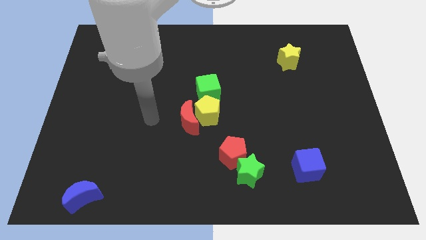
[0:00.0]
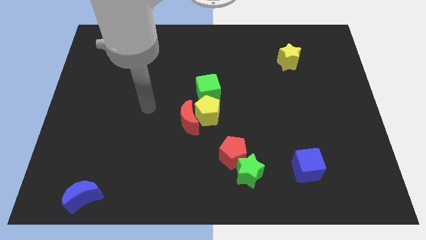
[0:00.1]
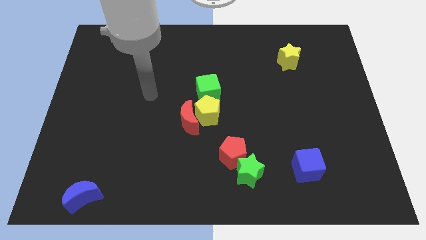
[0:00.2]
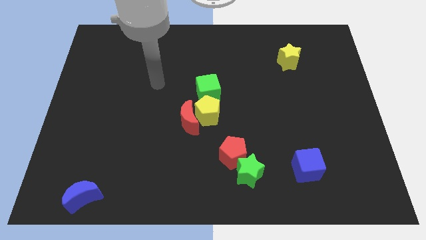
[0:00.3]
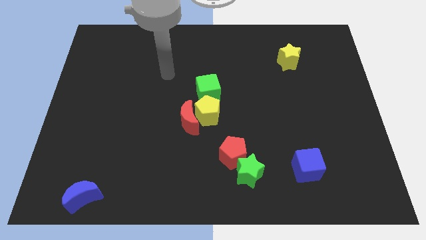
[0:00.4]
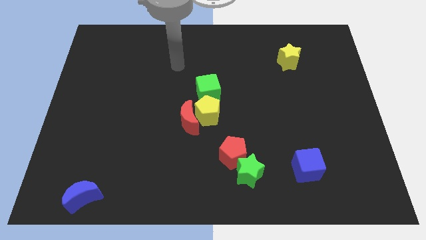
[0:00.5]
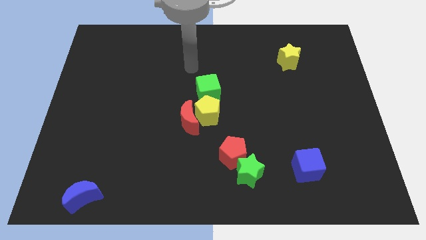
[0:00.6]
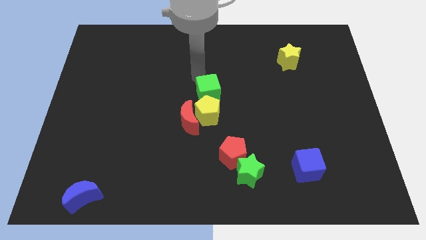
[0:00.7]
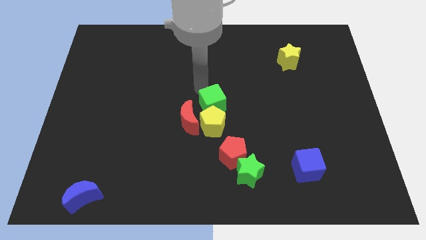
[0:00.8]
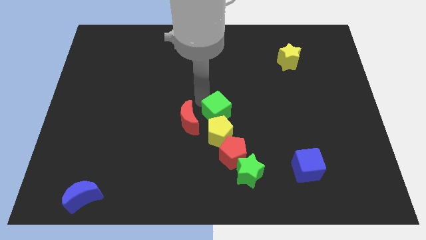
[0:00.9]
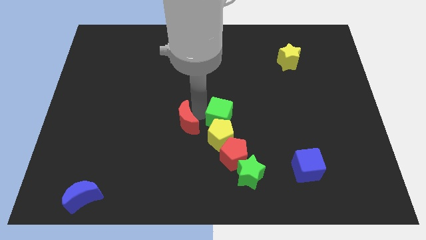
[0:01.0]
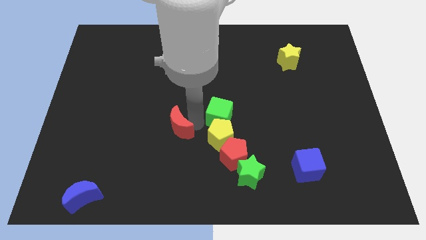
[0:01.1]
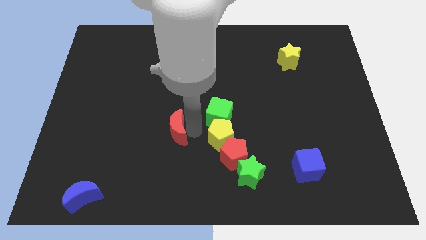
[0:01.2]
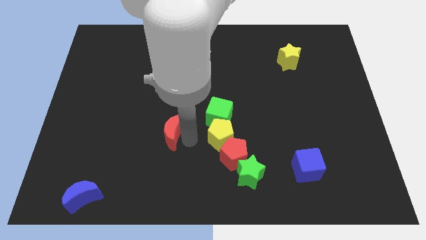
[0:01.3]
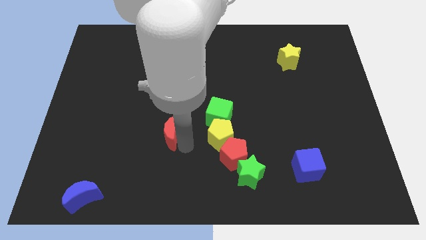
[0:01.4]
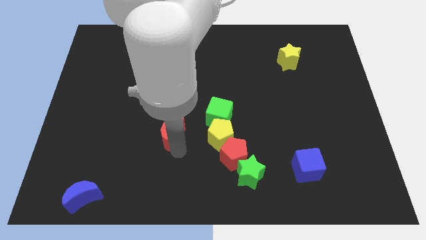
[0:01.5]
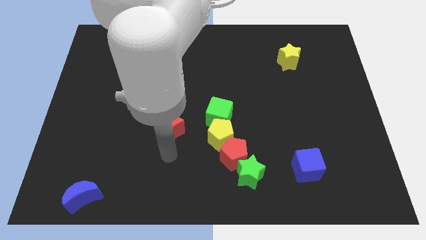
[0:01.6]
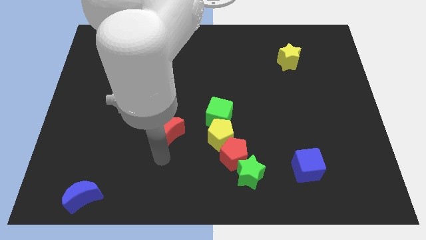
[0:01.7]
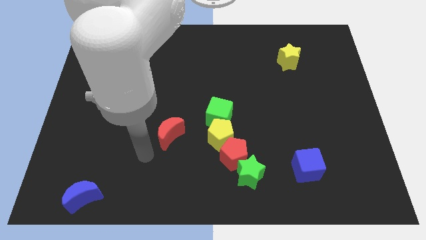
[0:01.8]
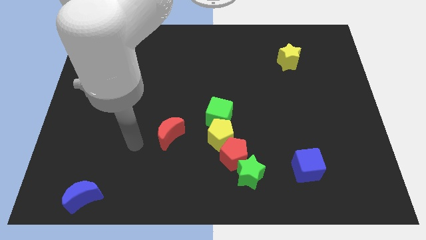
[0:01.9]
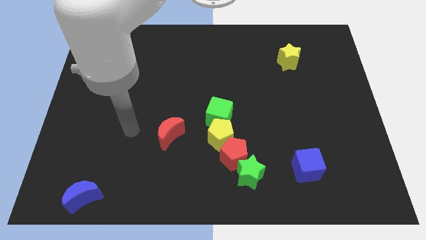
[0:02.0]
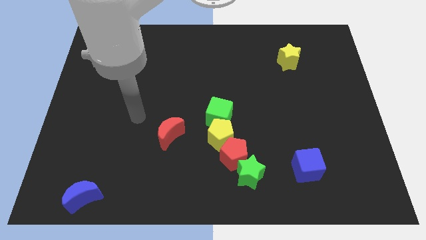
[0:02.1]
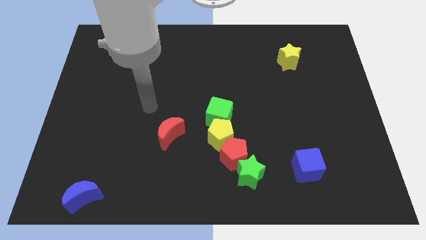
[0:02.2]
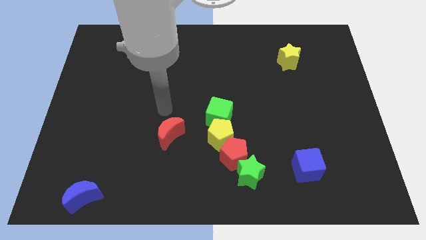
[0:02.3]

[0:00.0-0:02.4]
push the green square and the yellow pentagon towards down

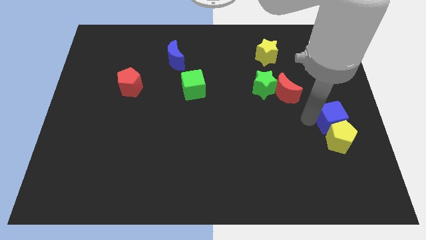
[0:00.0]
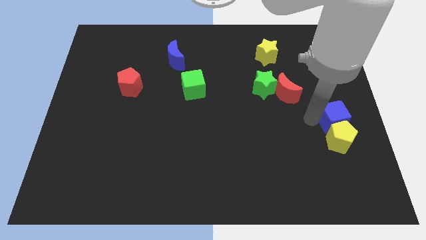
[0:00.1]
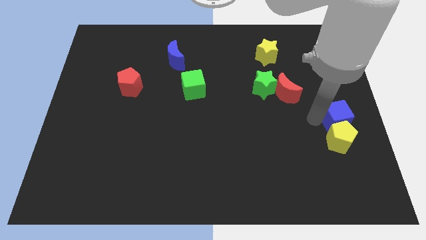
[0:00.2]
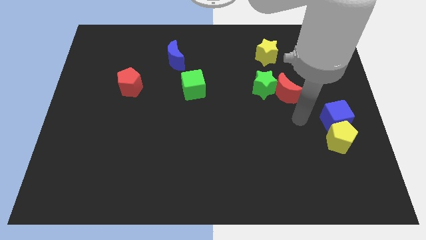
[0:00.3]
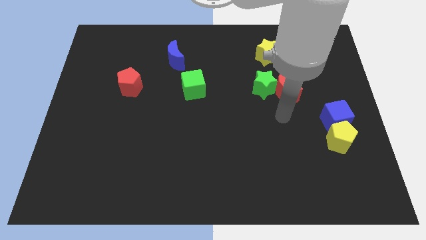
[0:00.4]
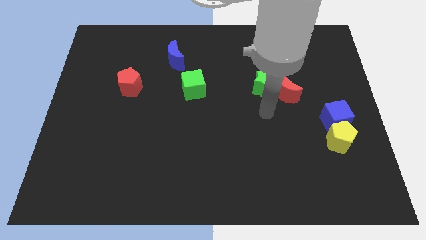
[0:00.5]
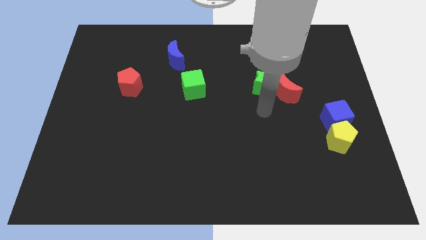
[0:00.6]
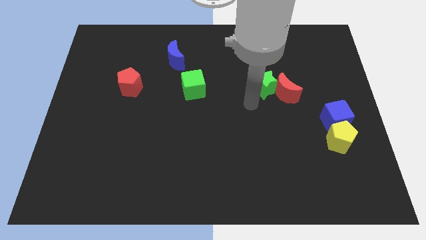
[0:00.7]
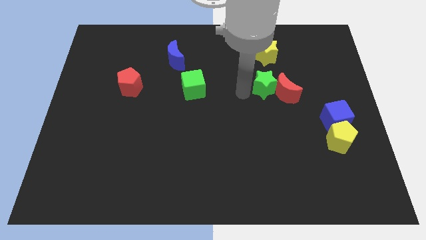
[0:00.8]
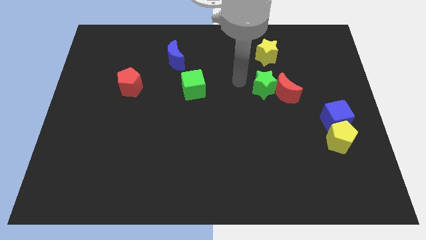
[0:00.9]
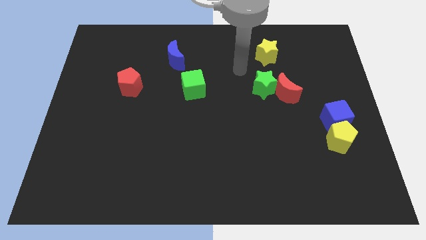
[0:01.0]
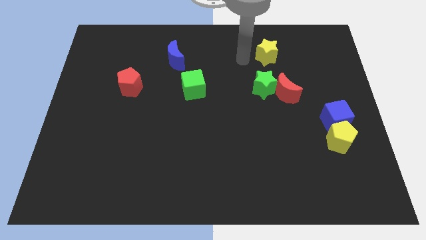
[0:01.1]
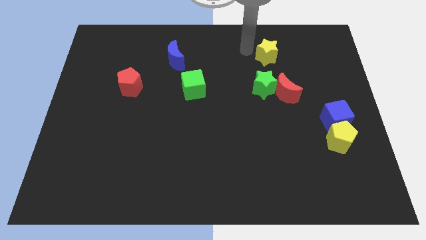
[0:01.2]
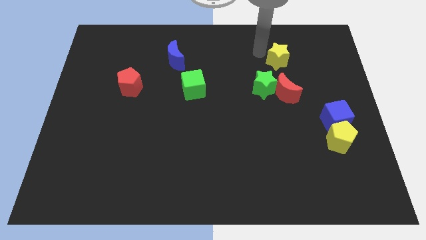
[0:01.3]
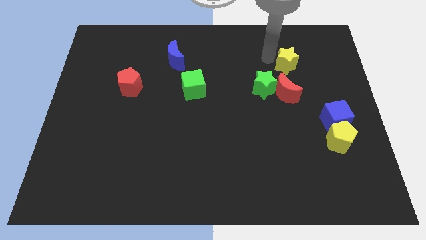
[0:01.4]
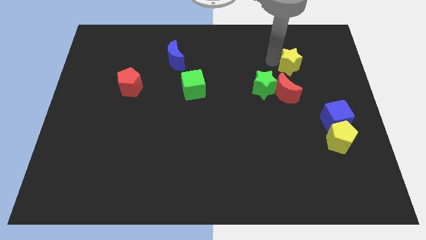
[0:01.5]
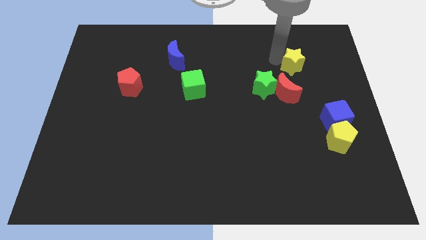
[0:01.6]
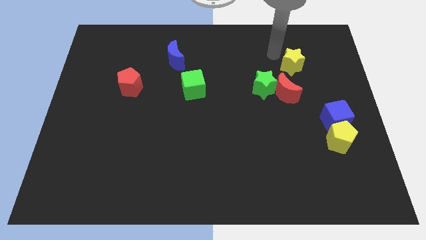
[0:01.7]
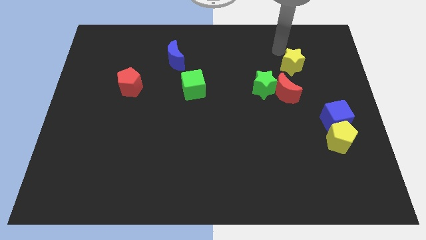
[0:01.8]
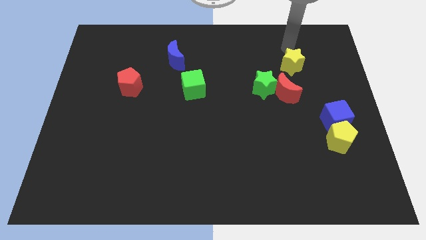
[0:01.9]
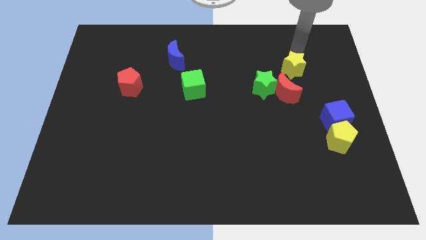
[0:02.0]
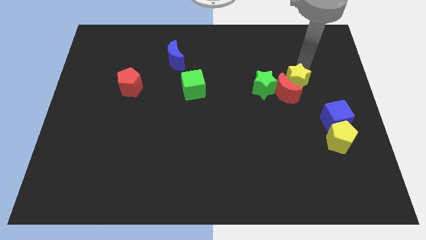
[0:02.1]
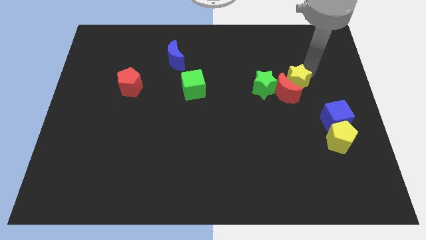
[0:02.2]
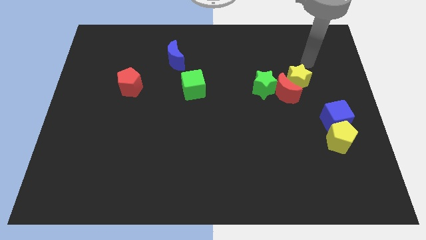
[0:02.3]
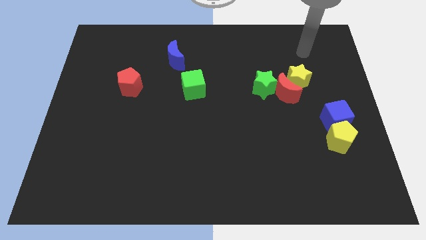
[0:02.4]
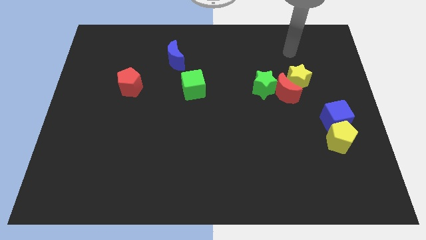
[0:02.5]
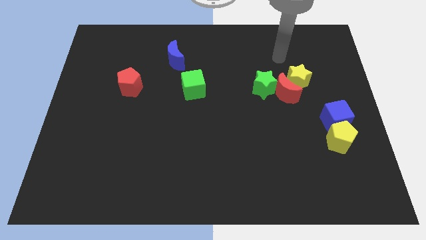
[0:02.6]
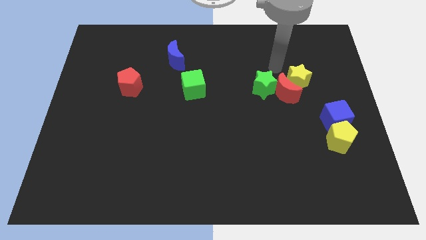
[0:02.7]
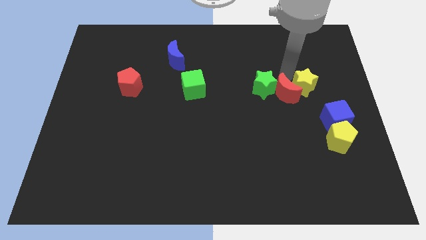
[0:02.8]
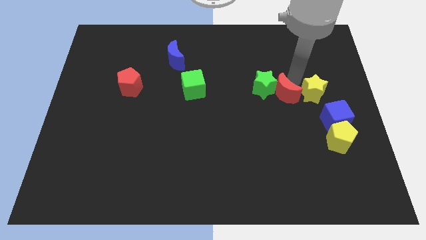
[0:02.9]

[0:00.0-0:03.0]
move yellow star near to the red crescent

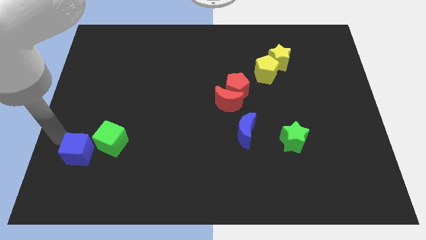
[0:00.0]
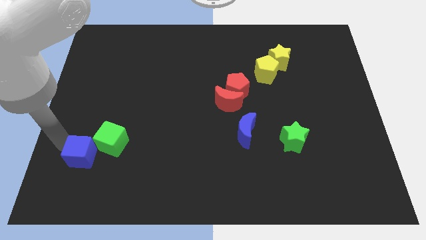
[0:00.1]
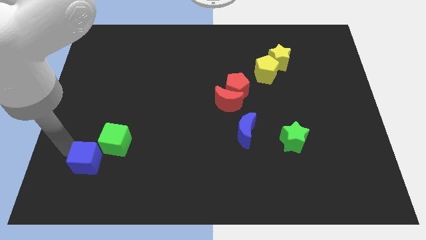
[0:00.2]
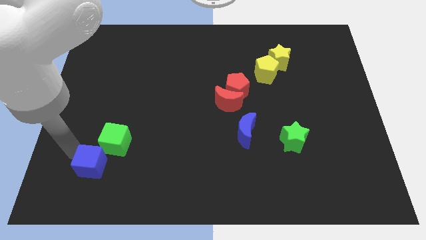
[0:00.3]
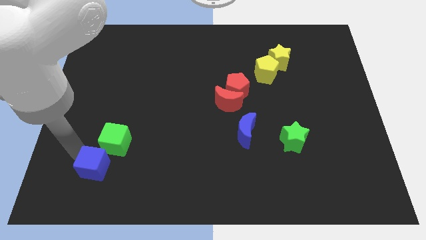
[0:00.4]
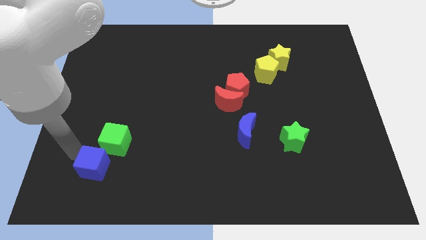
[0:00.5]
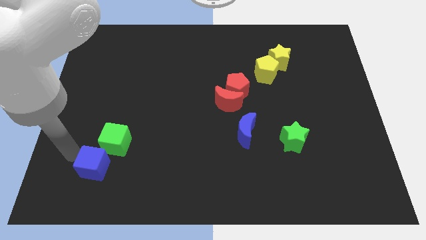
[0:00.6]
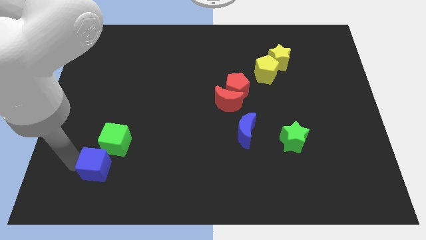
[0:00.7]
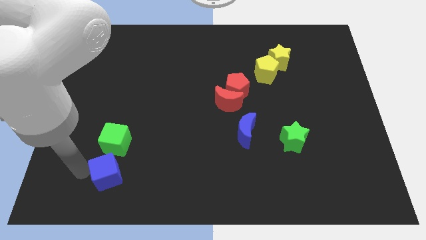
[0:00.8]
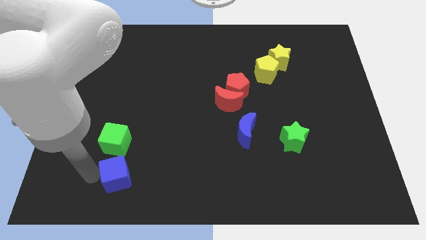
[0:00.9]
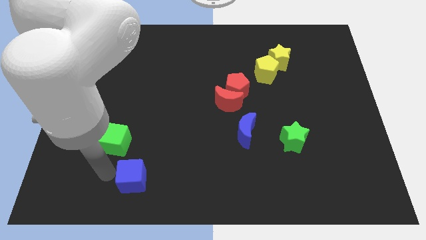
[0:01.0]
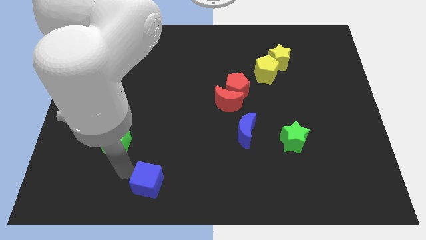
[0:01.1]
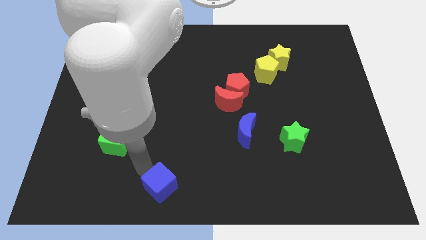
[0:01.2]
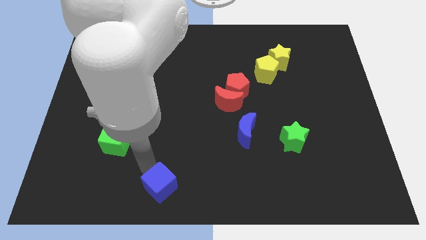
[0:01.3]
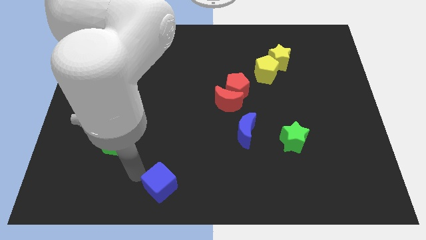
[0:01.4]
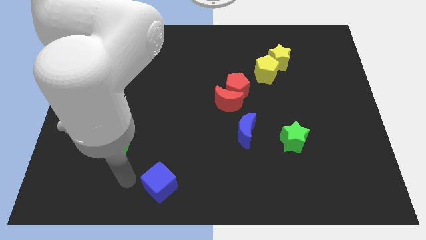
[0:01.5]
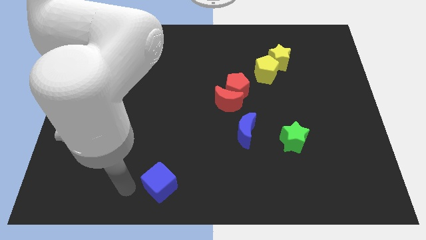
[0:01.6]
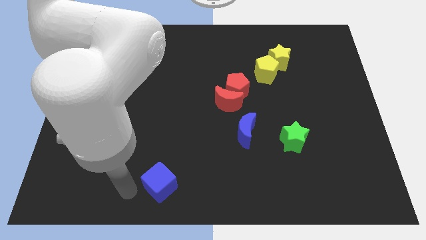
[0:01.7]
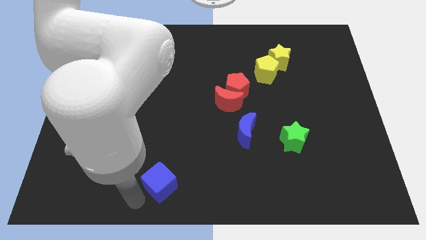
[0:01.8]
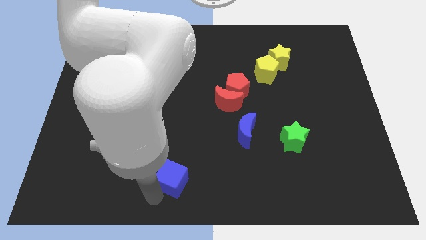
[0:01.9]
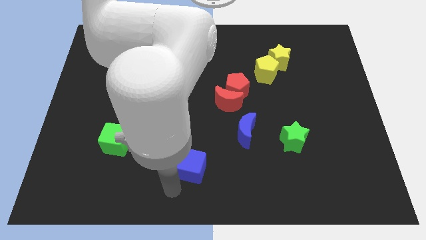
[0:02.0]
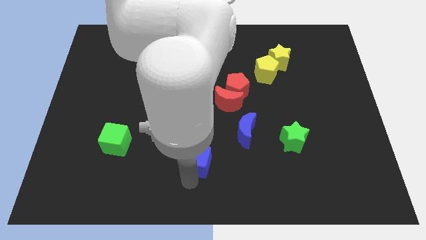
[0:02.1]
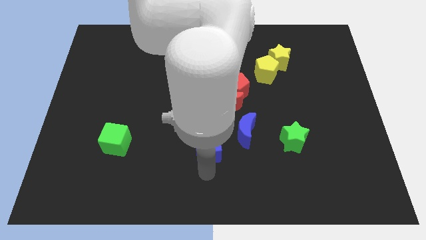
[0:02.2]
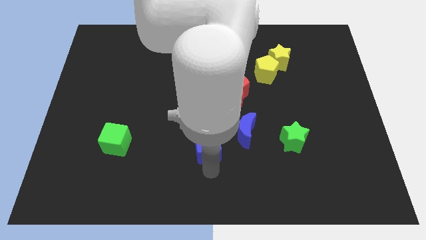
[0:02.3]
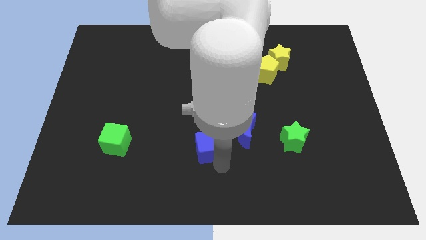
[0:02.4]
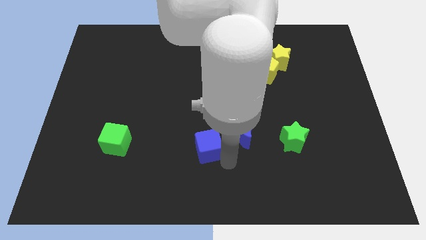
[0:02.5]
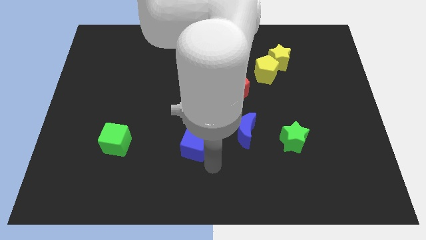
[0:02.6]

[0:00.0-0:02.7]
move the blue cube to the left of the blue crescent

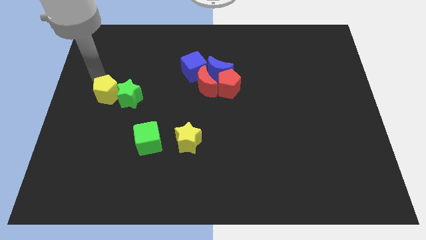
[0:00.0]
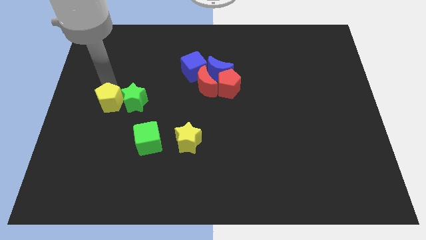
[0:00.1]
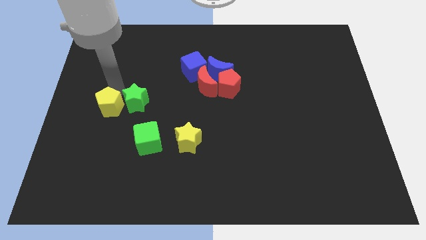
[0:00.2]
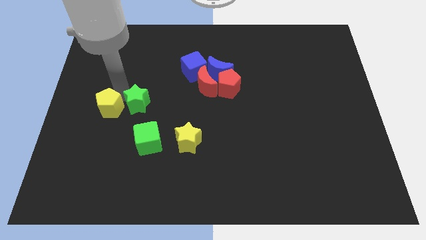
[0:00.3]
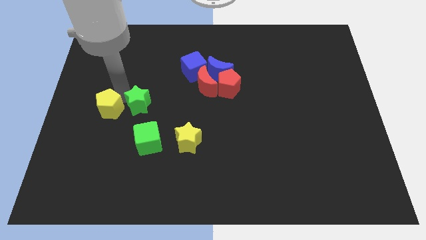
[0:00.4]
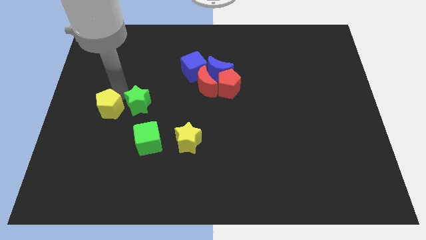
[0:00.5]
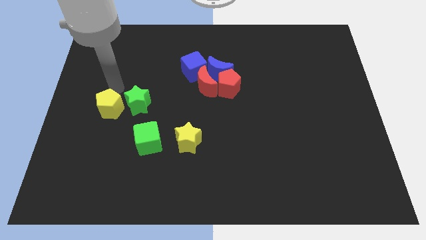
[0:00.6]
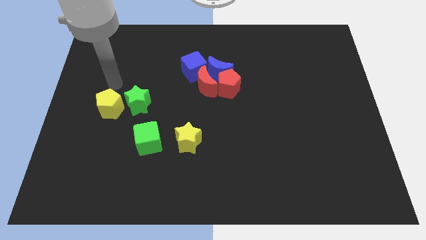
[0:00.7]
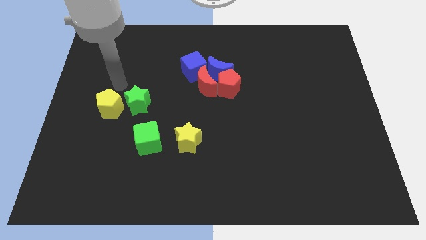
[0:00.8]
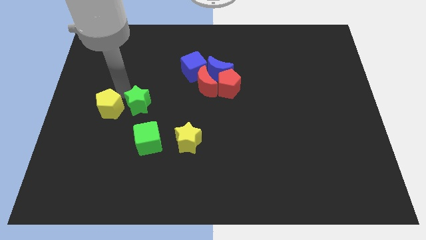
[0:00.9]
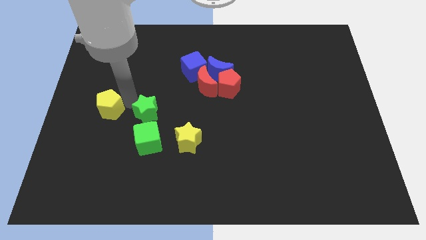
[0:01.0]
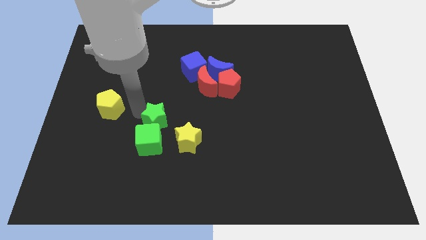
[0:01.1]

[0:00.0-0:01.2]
separate the green star and yellow pentagon
